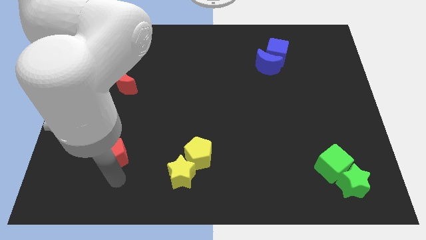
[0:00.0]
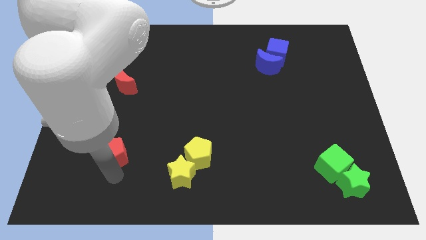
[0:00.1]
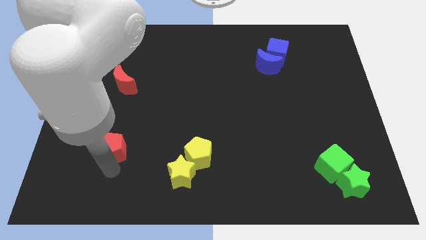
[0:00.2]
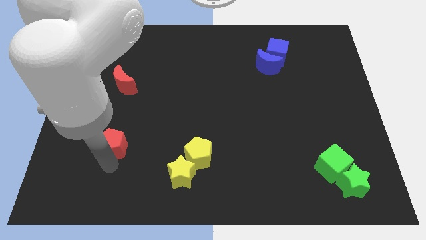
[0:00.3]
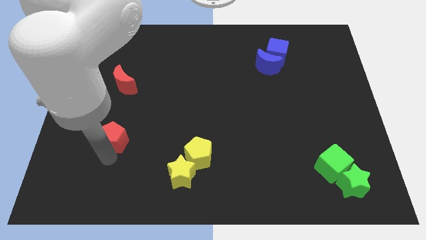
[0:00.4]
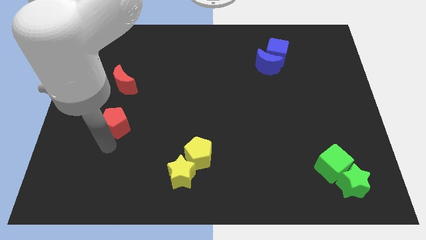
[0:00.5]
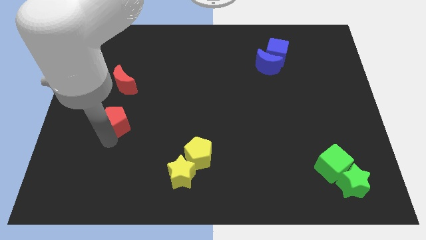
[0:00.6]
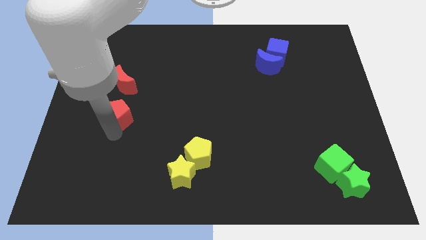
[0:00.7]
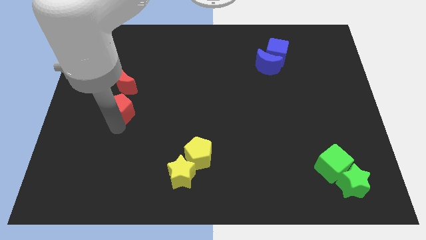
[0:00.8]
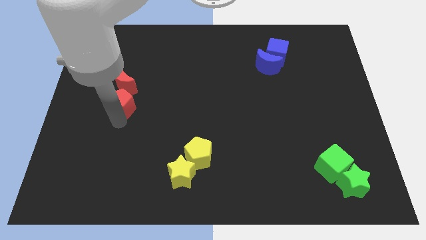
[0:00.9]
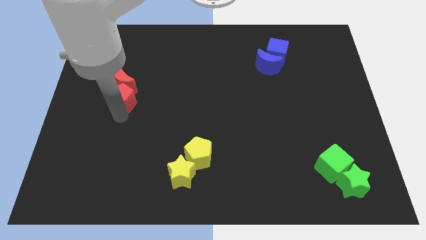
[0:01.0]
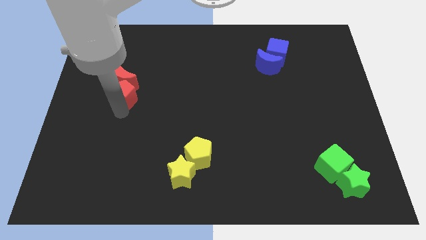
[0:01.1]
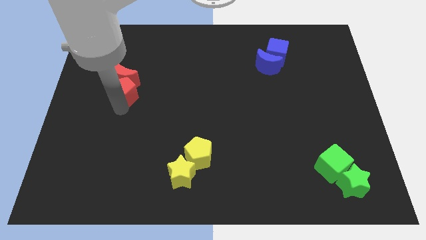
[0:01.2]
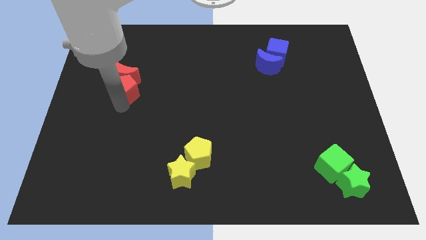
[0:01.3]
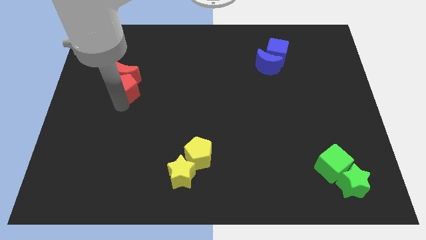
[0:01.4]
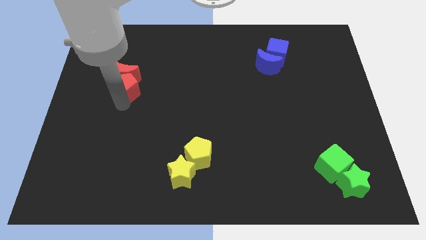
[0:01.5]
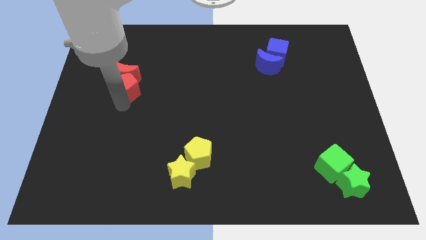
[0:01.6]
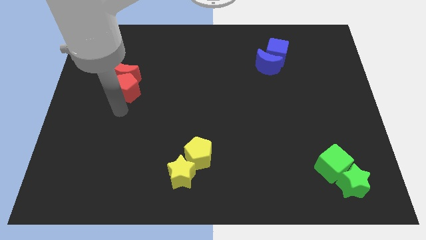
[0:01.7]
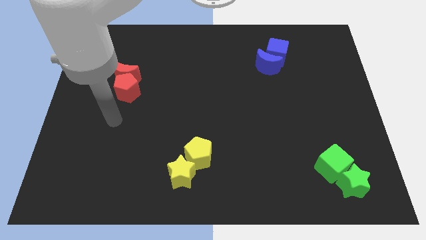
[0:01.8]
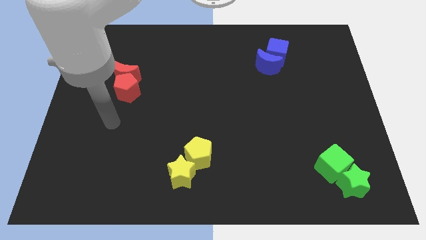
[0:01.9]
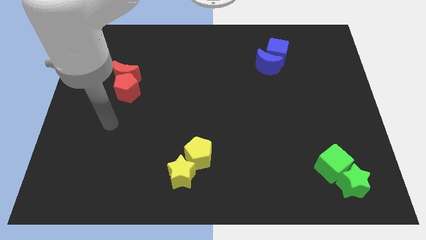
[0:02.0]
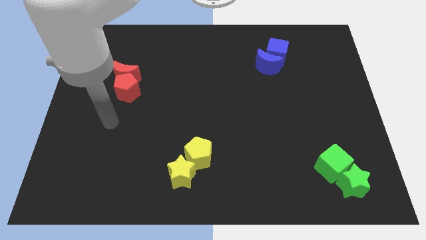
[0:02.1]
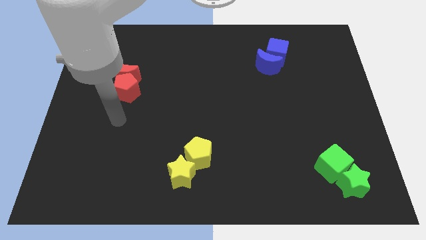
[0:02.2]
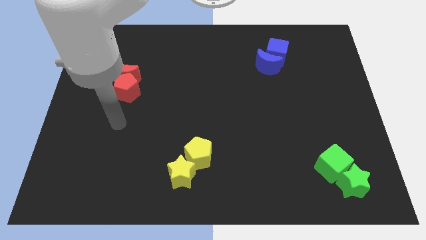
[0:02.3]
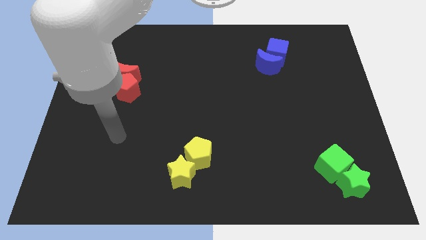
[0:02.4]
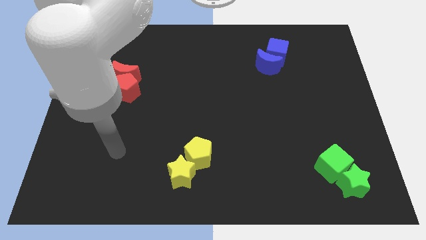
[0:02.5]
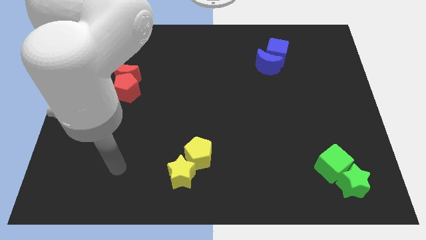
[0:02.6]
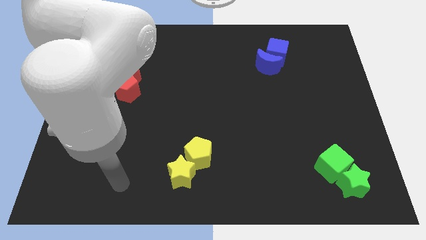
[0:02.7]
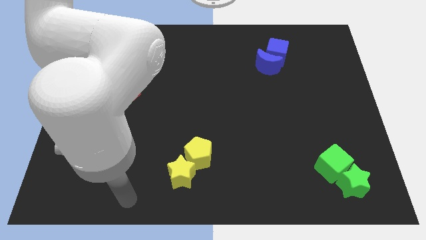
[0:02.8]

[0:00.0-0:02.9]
make the red pentagon to touch the bottom side of the red crescent

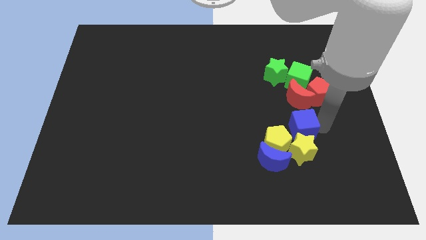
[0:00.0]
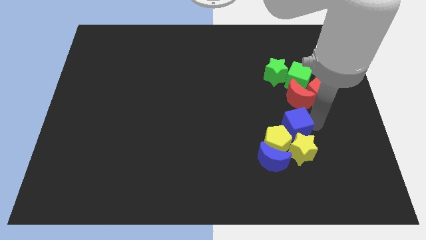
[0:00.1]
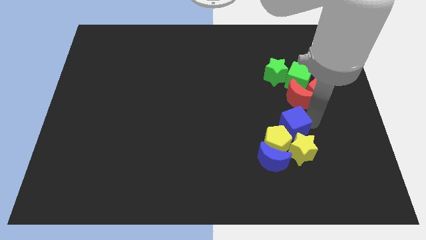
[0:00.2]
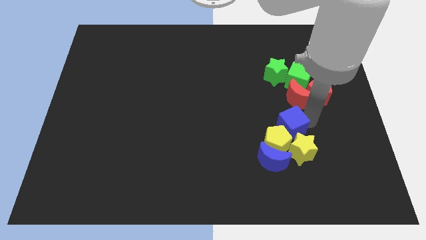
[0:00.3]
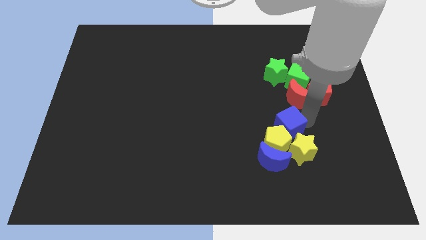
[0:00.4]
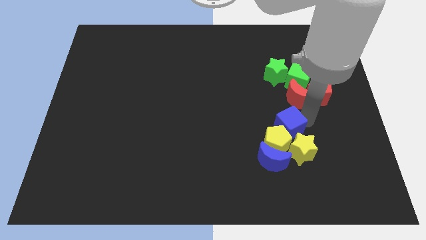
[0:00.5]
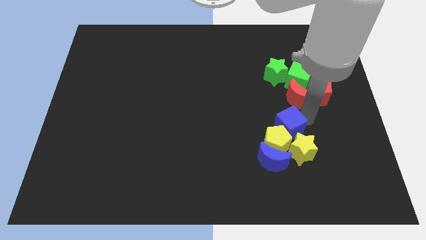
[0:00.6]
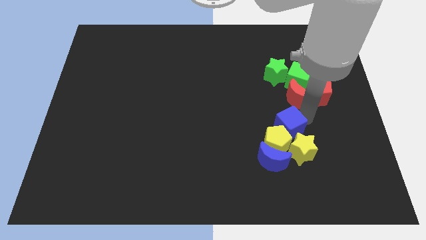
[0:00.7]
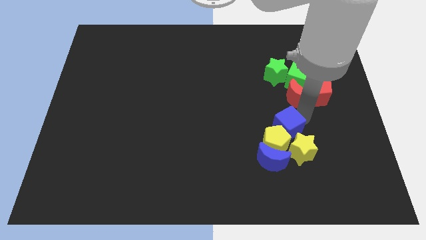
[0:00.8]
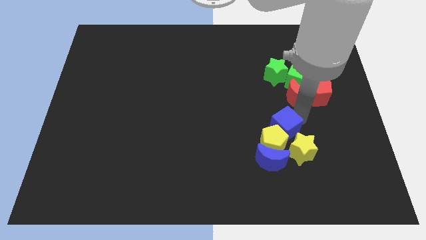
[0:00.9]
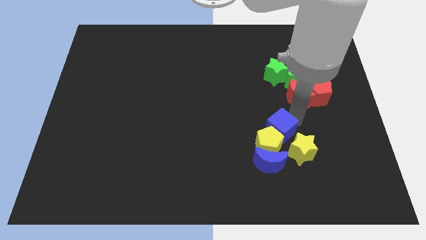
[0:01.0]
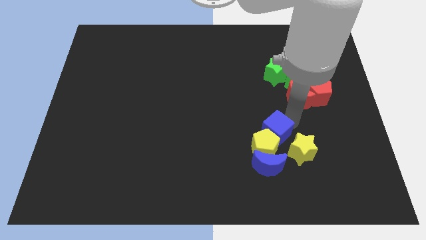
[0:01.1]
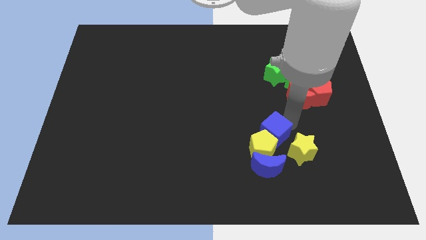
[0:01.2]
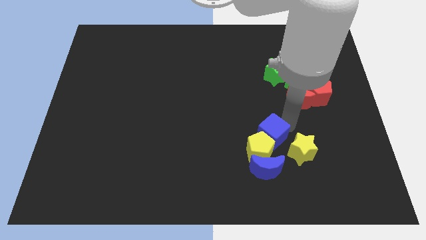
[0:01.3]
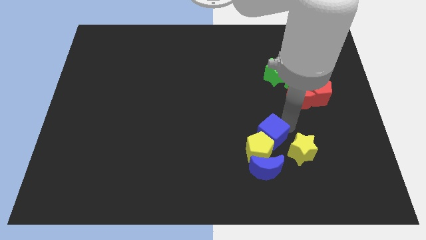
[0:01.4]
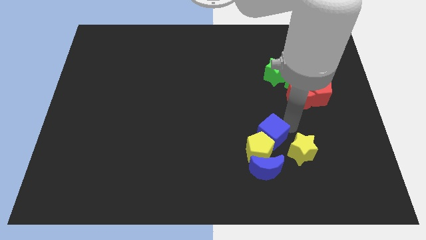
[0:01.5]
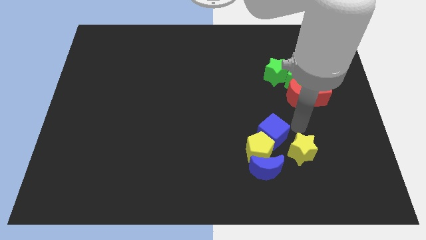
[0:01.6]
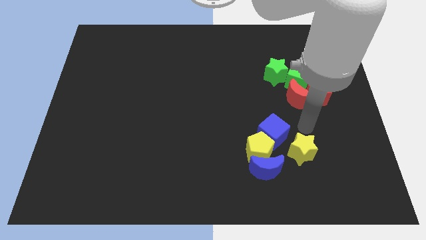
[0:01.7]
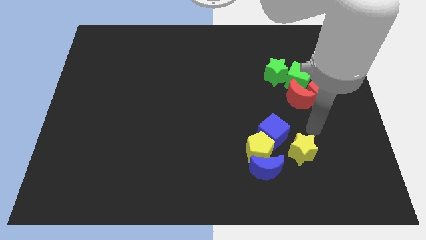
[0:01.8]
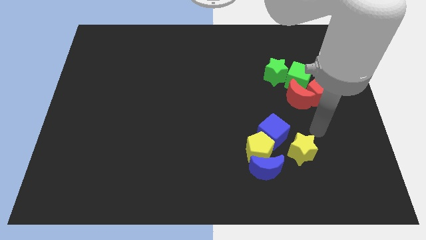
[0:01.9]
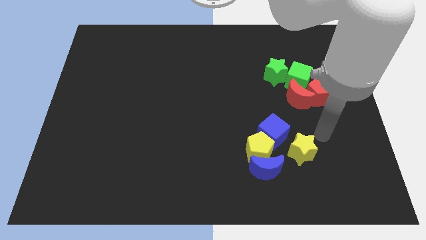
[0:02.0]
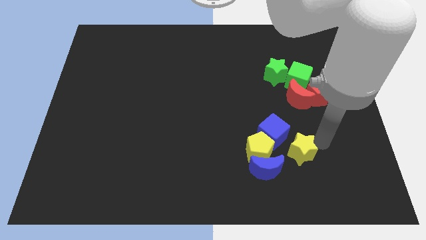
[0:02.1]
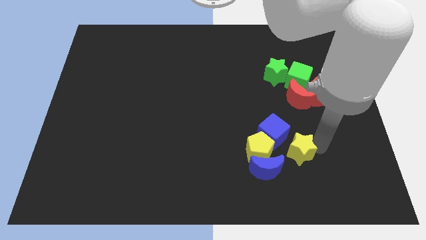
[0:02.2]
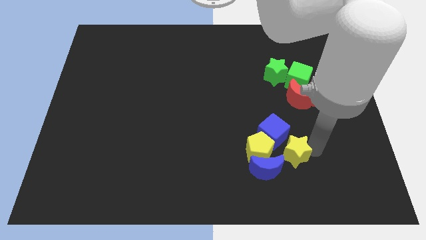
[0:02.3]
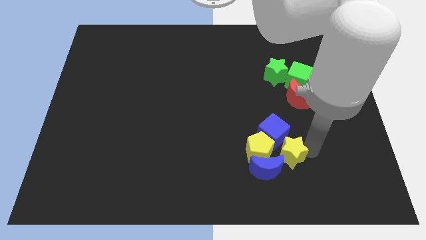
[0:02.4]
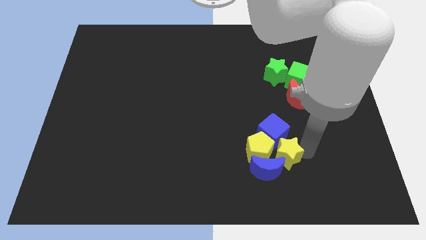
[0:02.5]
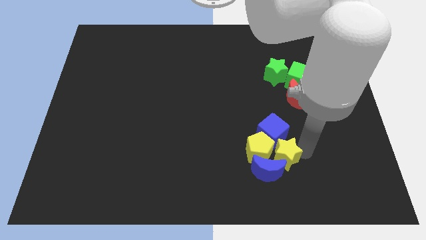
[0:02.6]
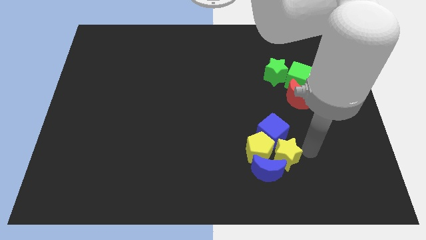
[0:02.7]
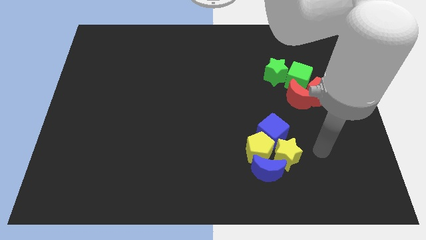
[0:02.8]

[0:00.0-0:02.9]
move the yellow star right to the yellow pentagon

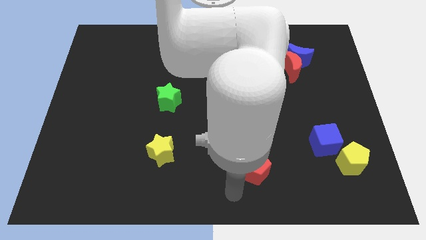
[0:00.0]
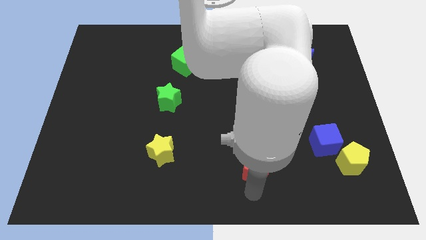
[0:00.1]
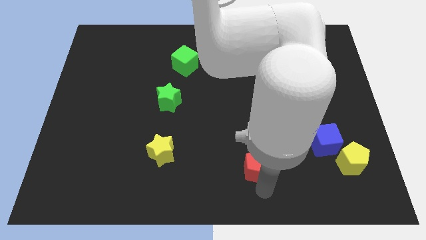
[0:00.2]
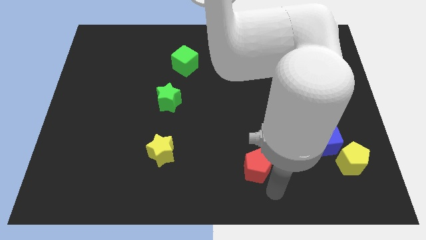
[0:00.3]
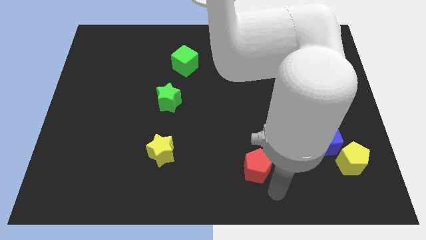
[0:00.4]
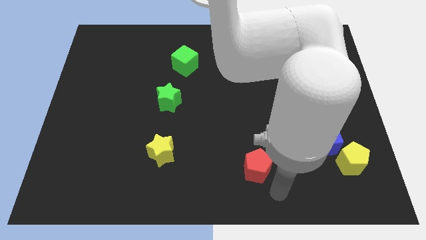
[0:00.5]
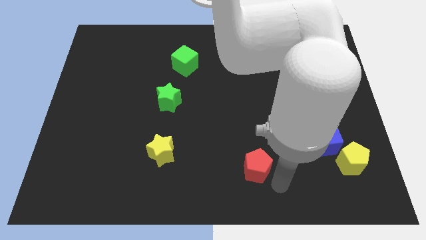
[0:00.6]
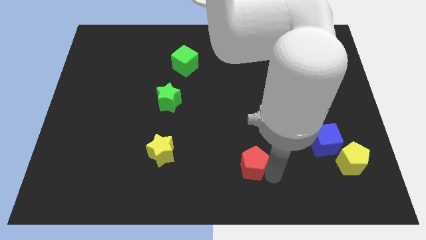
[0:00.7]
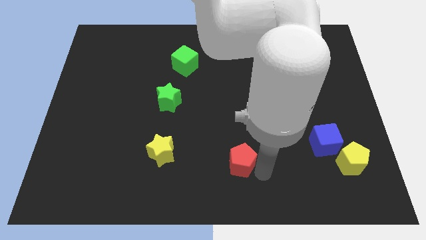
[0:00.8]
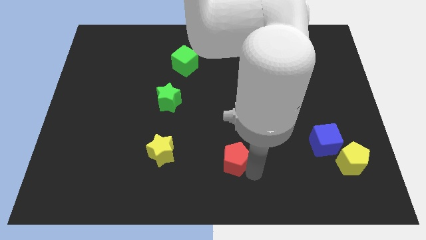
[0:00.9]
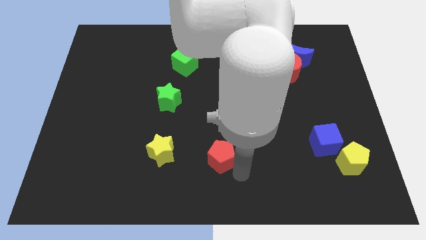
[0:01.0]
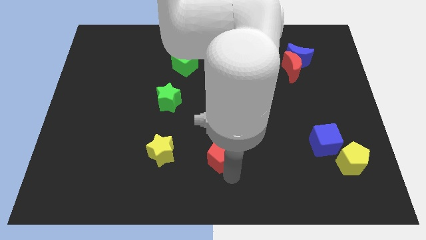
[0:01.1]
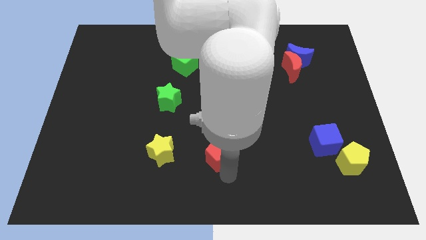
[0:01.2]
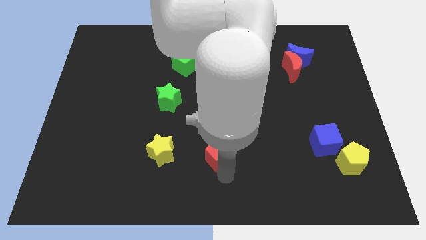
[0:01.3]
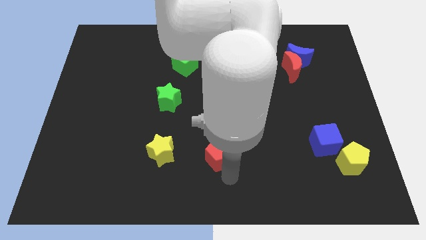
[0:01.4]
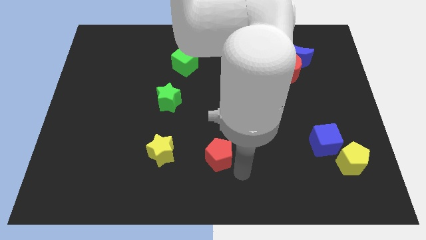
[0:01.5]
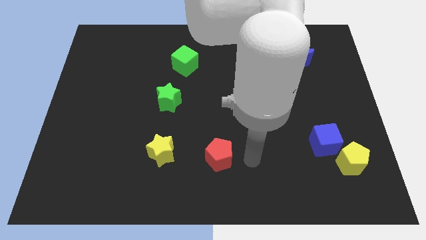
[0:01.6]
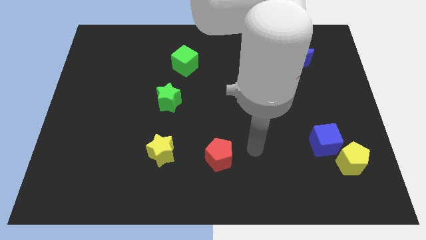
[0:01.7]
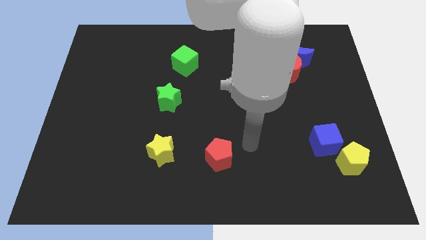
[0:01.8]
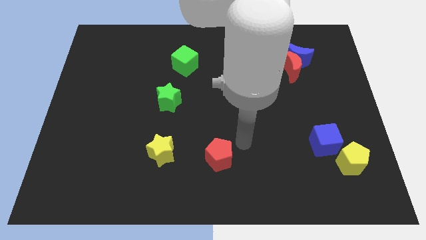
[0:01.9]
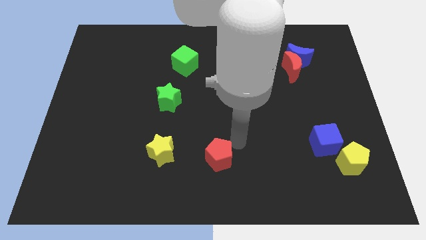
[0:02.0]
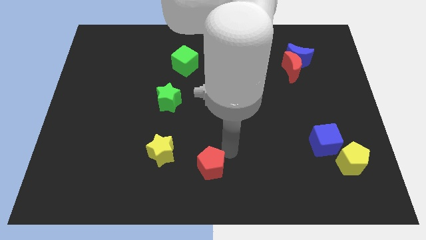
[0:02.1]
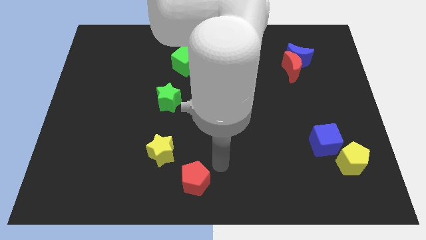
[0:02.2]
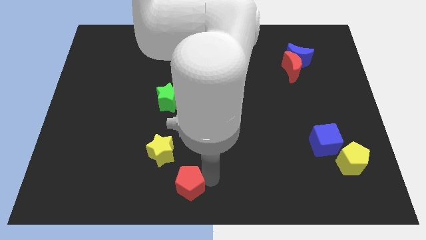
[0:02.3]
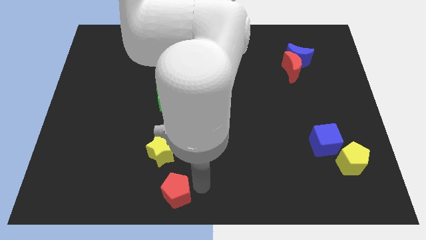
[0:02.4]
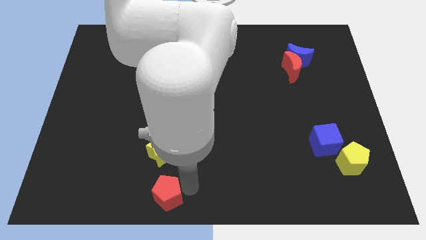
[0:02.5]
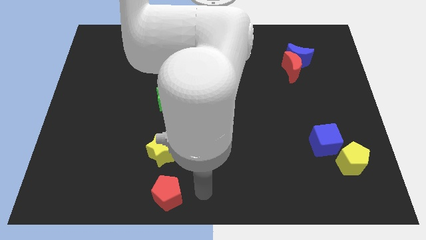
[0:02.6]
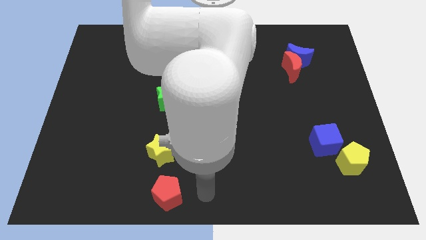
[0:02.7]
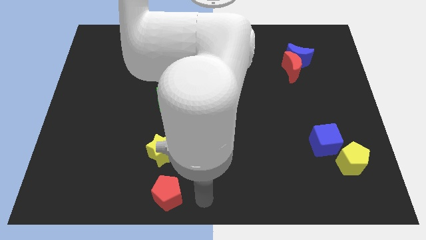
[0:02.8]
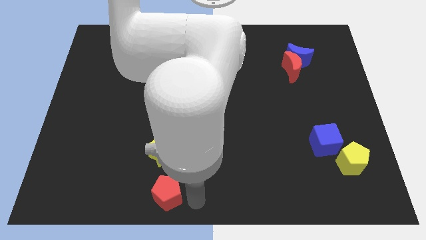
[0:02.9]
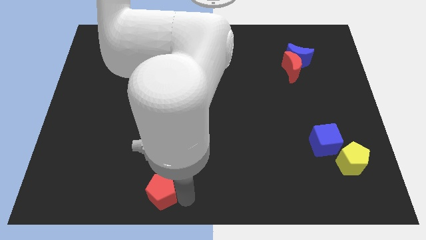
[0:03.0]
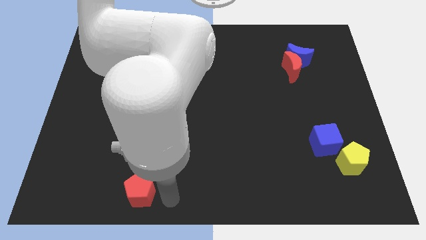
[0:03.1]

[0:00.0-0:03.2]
place red pentagon down to the yellow star
